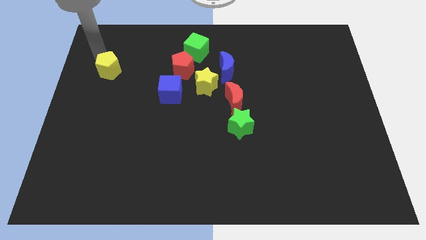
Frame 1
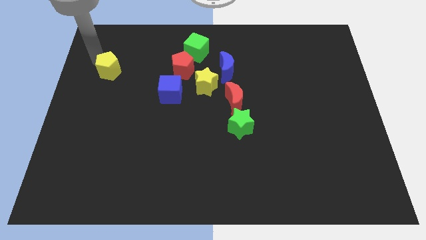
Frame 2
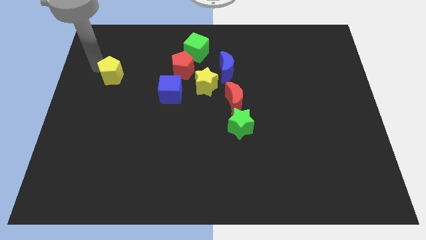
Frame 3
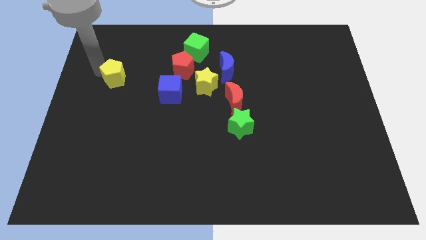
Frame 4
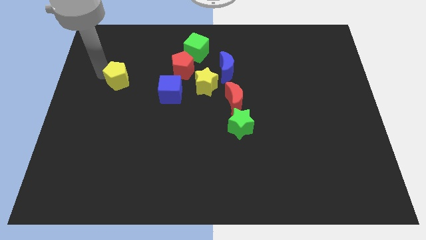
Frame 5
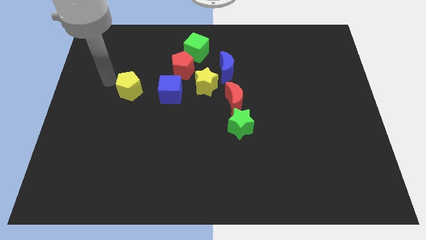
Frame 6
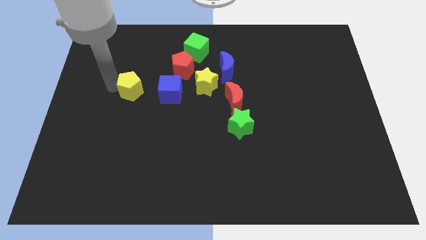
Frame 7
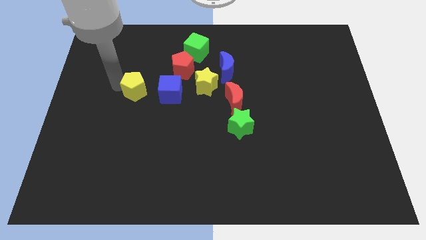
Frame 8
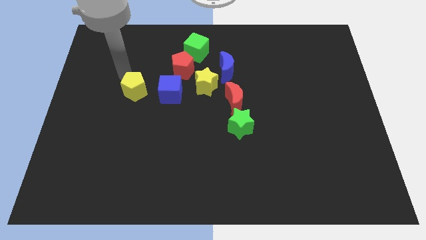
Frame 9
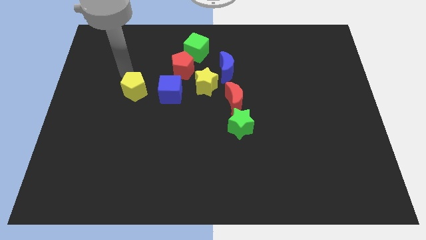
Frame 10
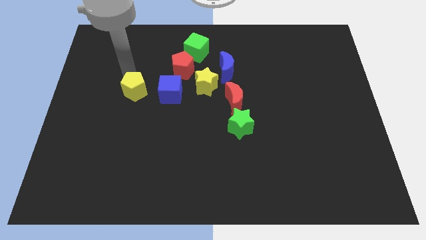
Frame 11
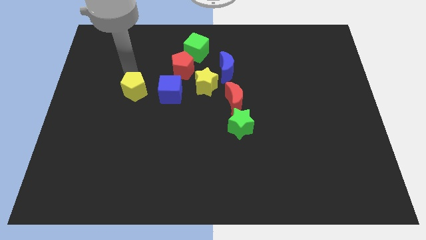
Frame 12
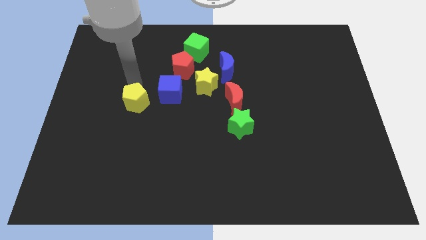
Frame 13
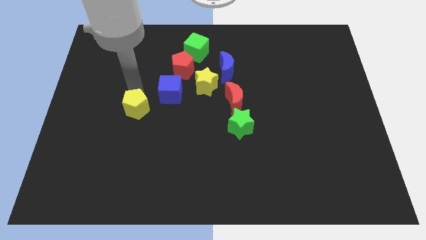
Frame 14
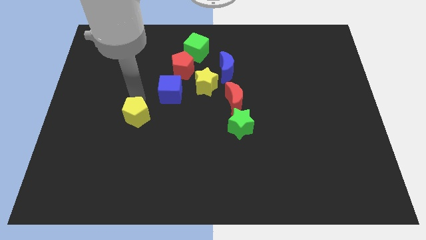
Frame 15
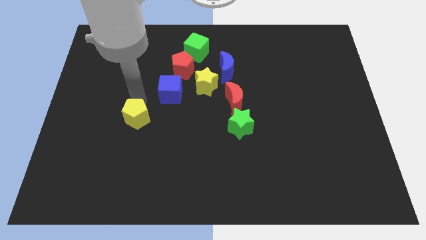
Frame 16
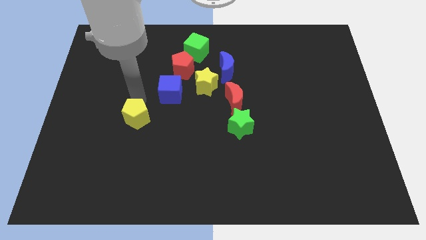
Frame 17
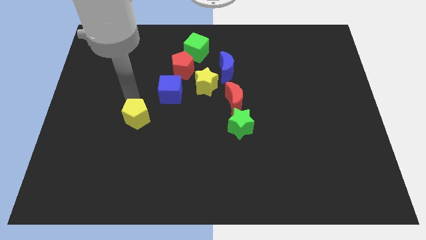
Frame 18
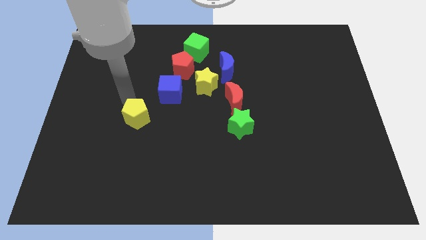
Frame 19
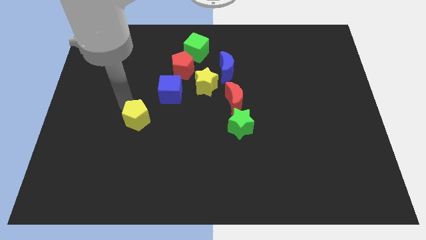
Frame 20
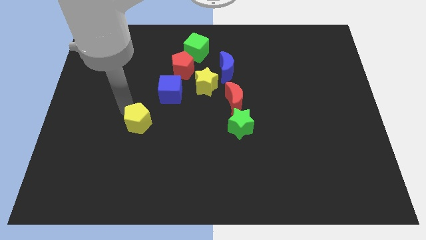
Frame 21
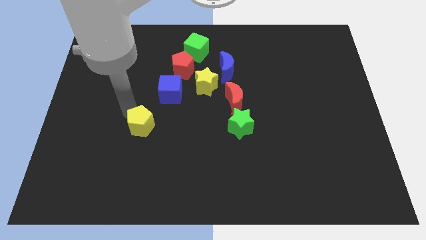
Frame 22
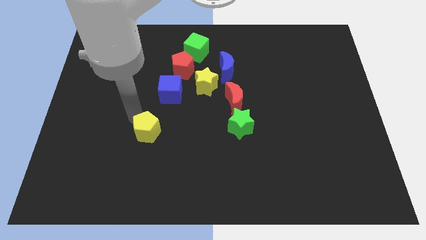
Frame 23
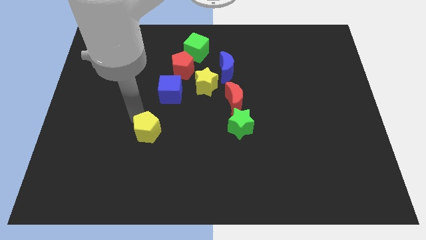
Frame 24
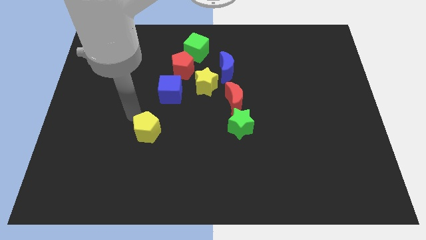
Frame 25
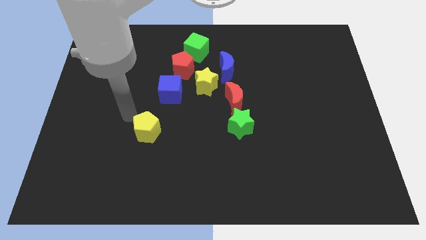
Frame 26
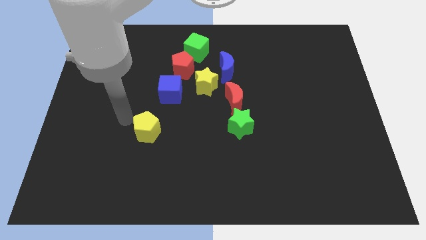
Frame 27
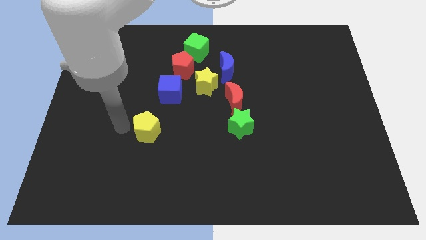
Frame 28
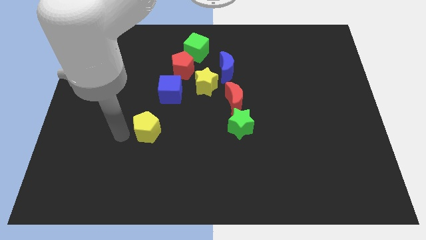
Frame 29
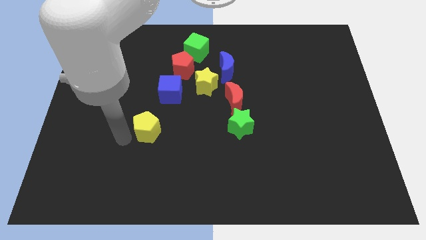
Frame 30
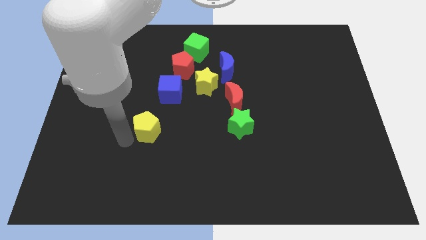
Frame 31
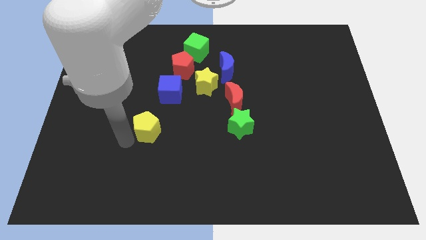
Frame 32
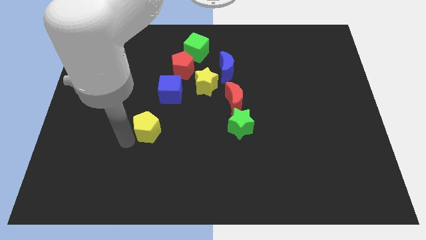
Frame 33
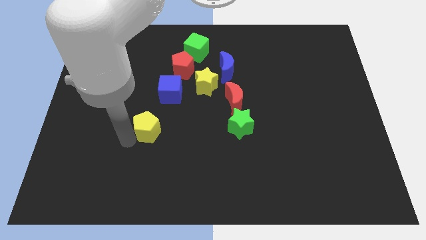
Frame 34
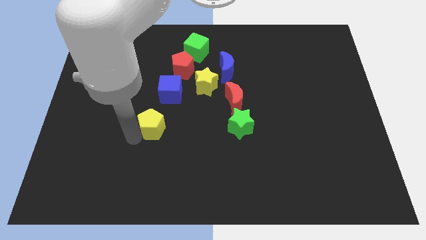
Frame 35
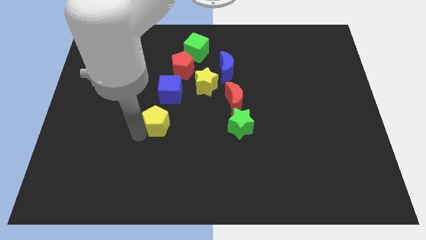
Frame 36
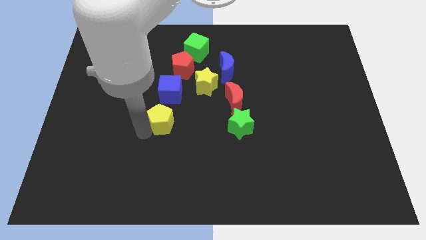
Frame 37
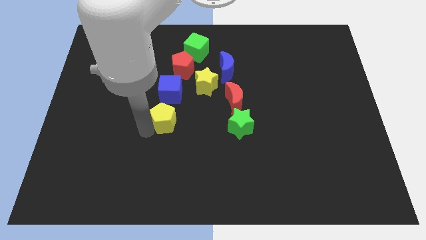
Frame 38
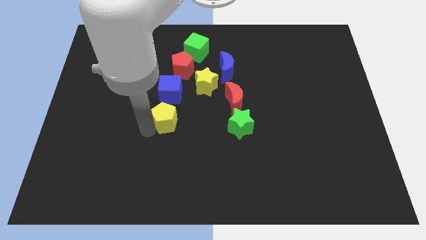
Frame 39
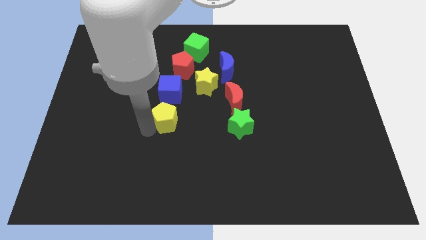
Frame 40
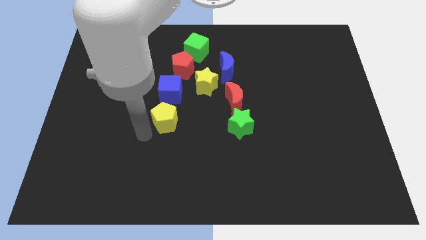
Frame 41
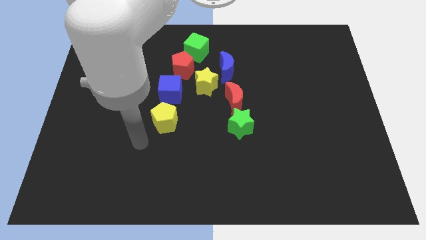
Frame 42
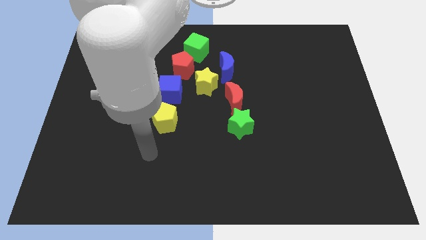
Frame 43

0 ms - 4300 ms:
slide the yellow pentagon horizontally to the left side of the green star

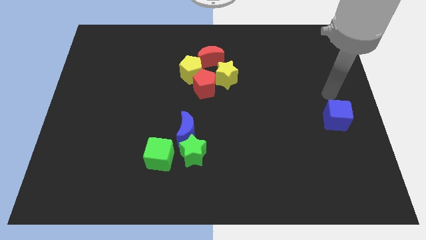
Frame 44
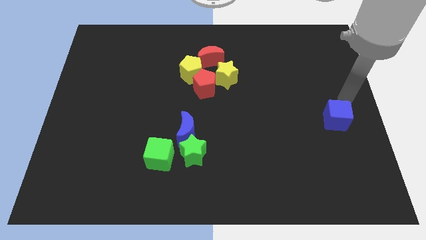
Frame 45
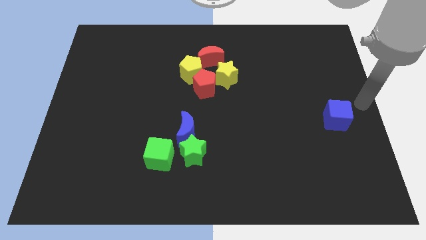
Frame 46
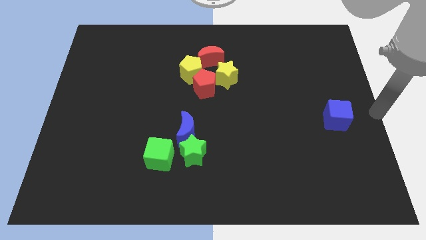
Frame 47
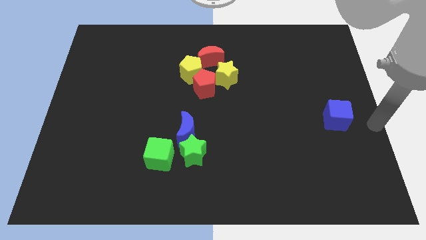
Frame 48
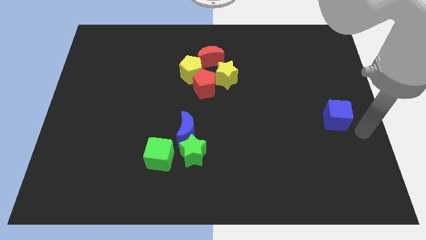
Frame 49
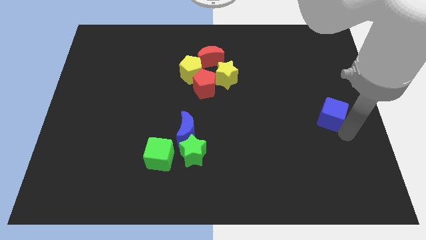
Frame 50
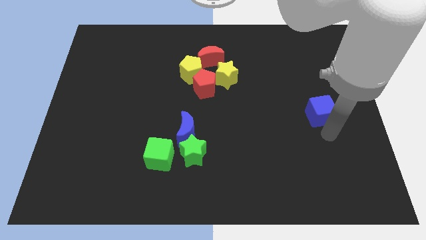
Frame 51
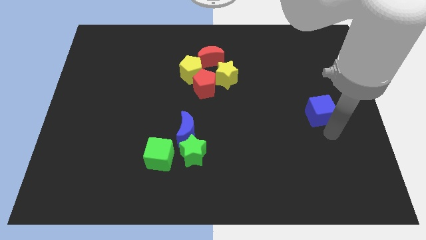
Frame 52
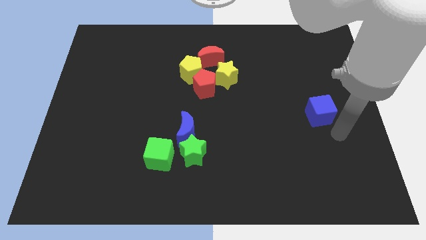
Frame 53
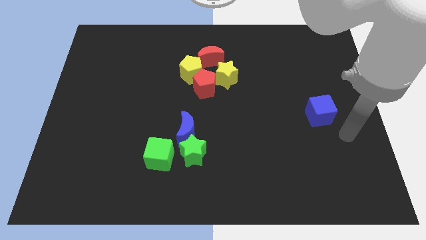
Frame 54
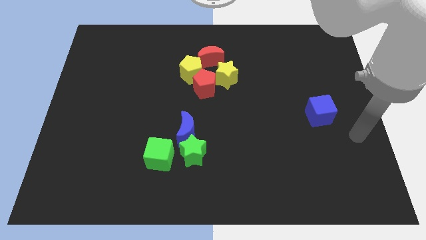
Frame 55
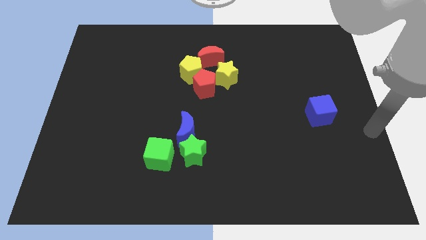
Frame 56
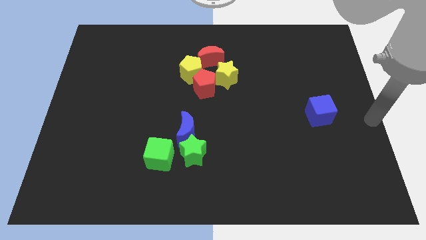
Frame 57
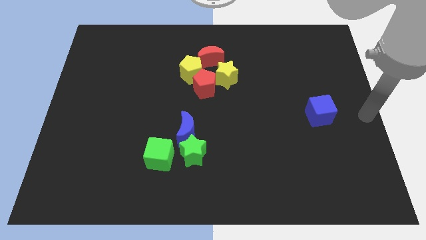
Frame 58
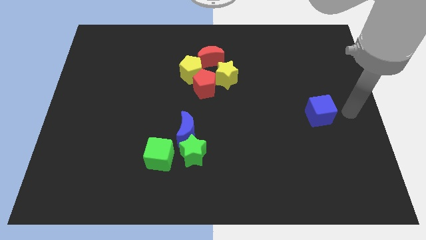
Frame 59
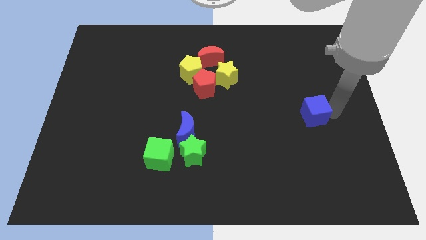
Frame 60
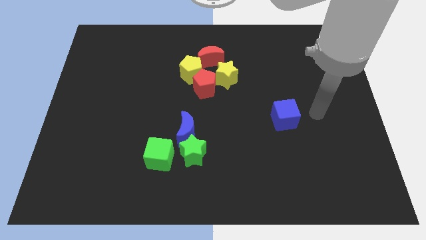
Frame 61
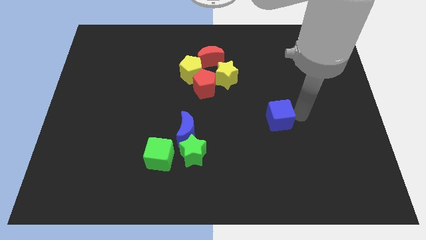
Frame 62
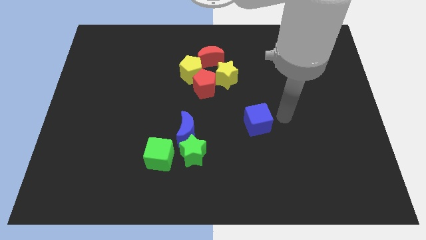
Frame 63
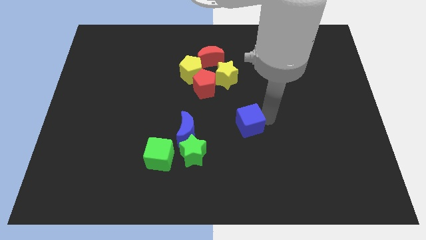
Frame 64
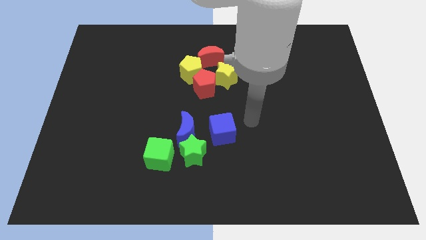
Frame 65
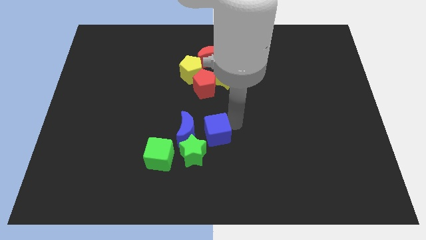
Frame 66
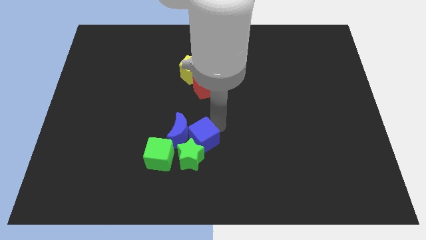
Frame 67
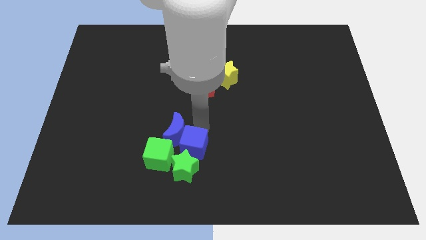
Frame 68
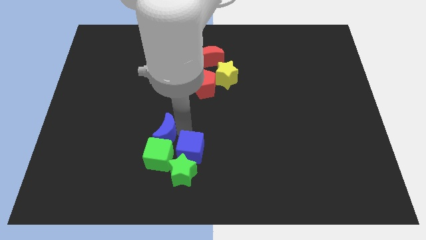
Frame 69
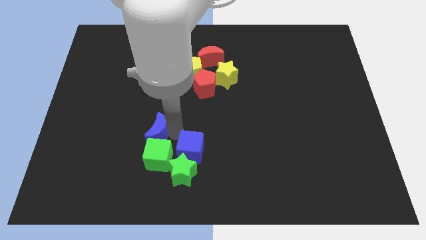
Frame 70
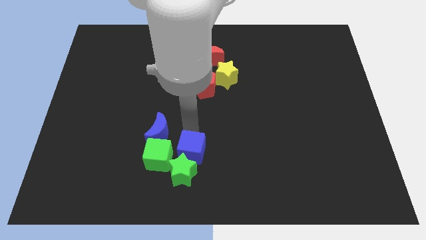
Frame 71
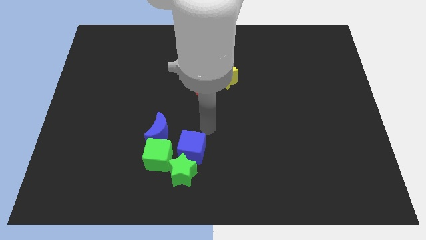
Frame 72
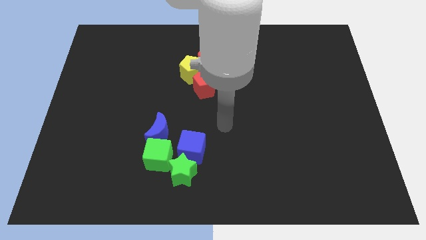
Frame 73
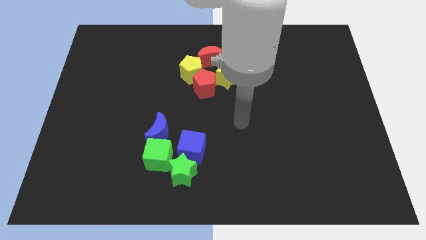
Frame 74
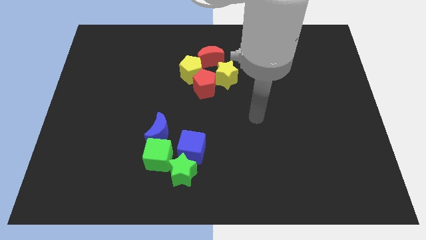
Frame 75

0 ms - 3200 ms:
place the blue moon above the green star

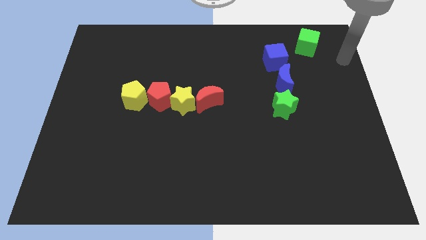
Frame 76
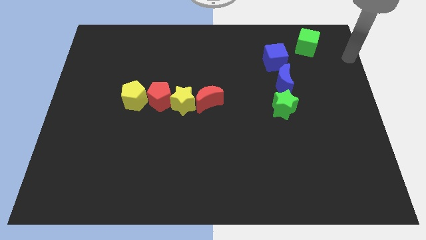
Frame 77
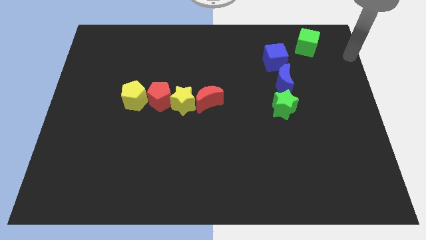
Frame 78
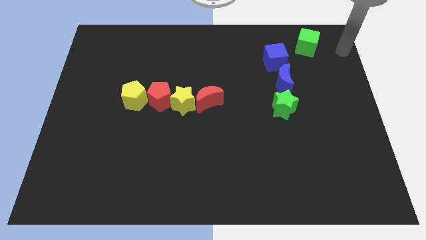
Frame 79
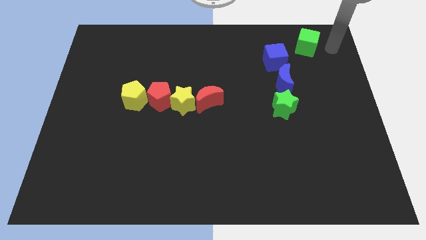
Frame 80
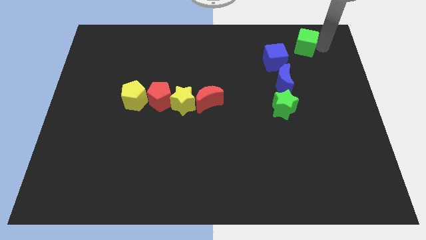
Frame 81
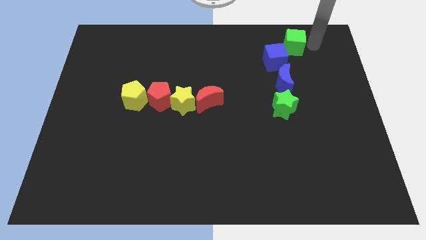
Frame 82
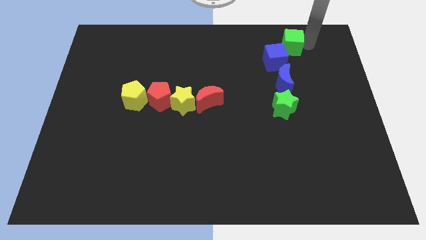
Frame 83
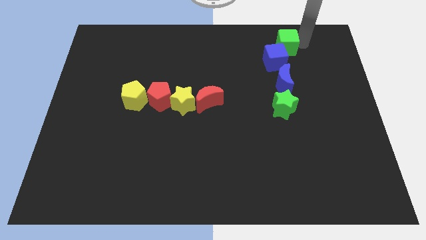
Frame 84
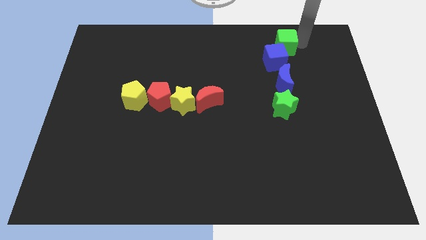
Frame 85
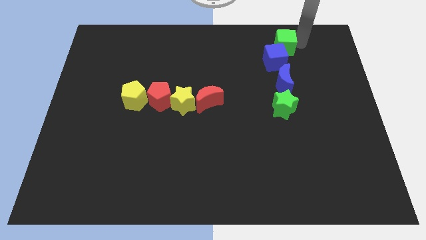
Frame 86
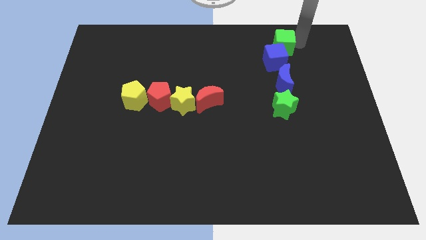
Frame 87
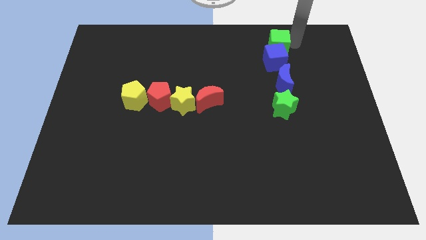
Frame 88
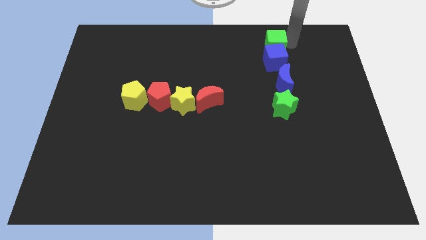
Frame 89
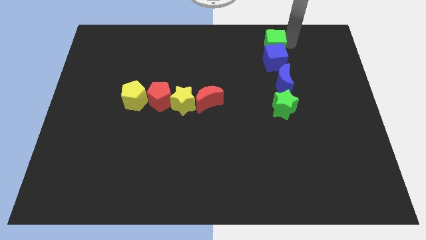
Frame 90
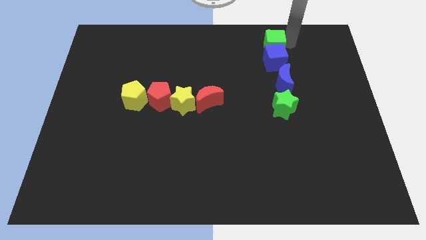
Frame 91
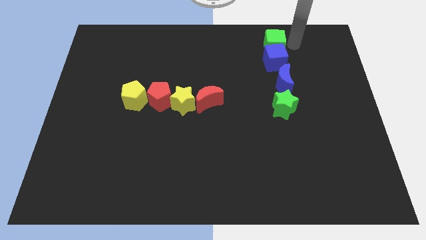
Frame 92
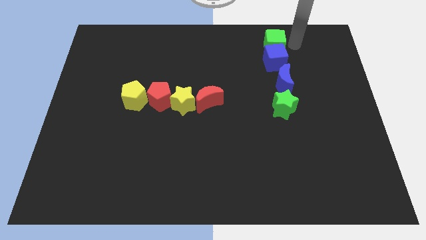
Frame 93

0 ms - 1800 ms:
push the green cube above to the blue cube
